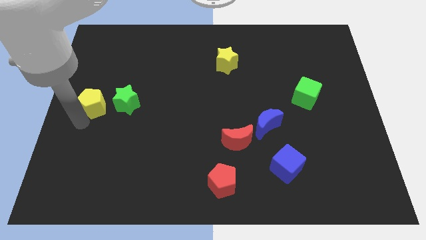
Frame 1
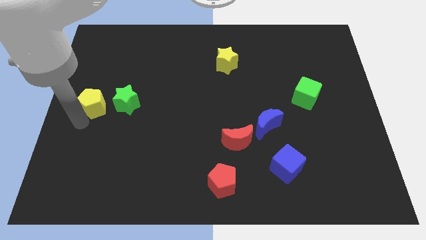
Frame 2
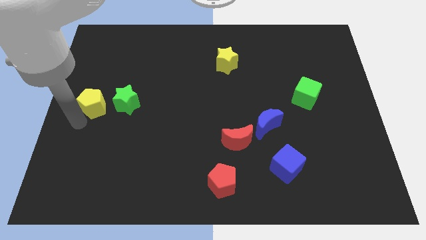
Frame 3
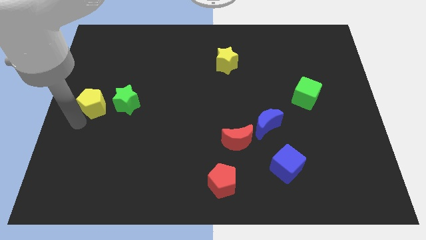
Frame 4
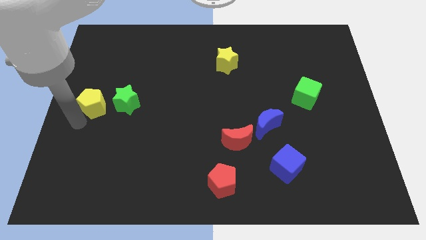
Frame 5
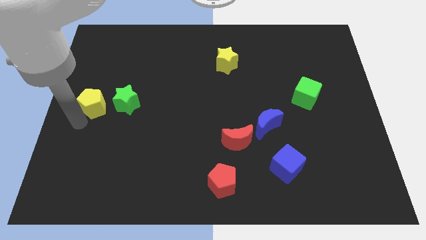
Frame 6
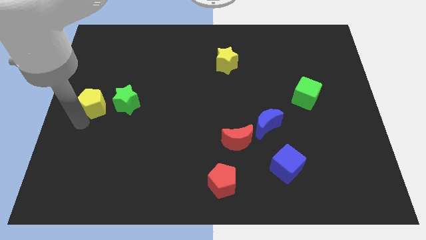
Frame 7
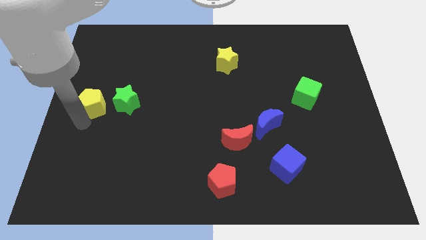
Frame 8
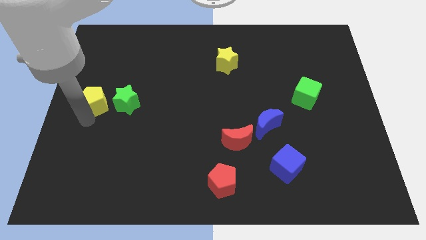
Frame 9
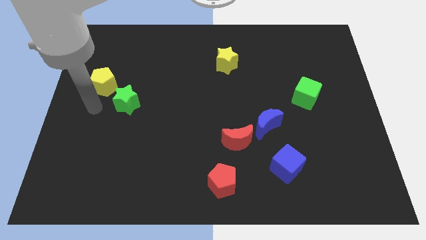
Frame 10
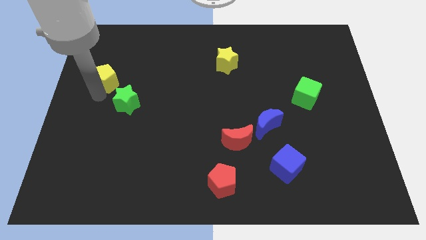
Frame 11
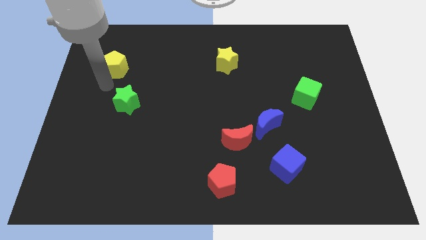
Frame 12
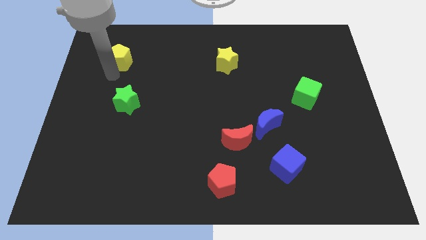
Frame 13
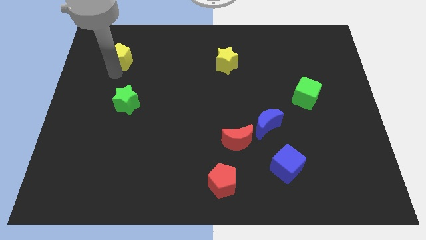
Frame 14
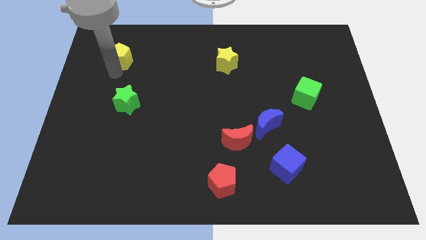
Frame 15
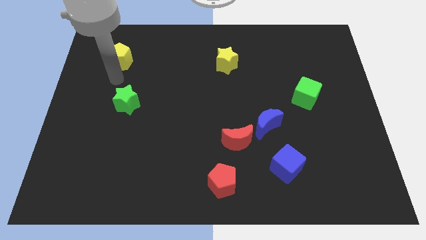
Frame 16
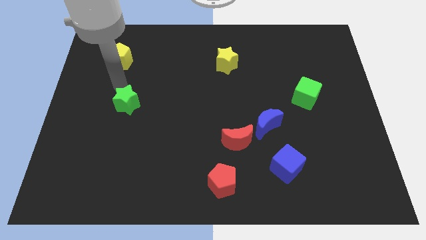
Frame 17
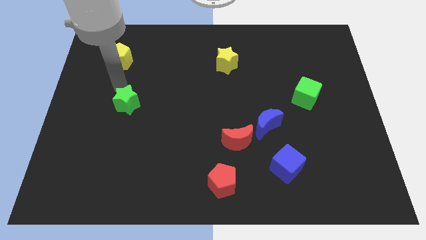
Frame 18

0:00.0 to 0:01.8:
slightly push the yellow pentagon upwards

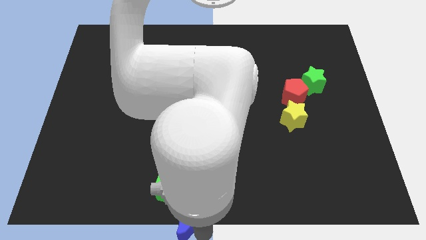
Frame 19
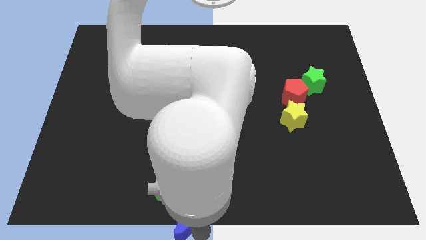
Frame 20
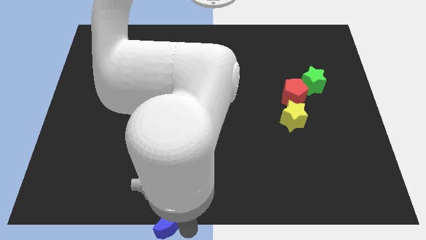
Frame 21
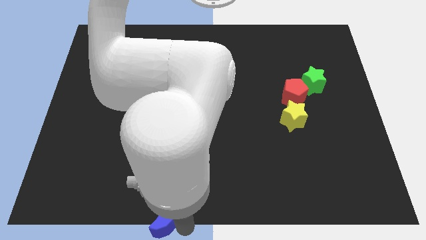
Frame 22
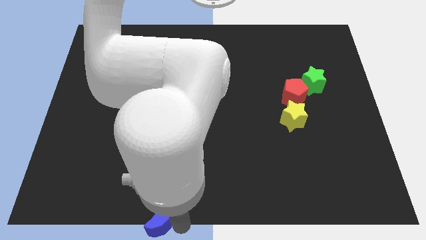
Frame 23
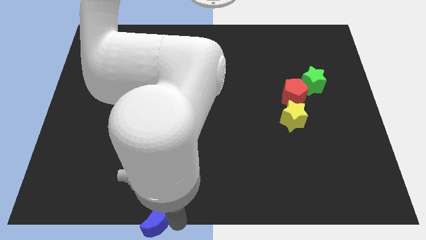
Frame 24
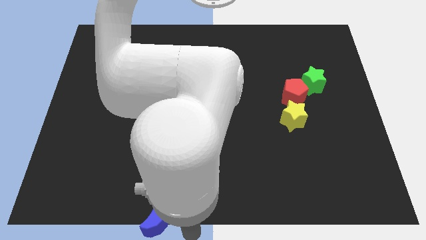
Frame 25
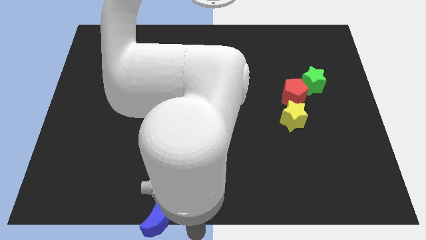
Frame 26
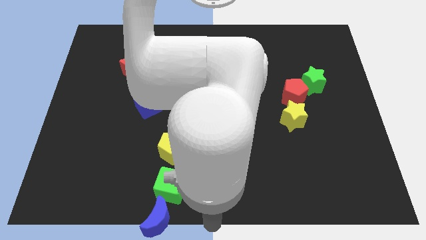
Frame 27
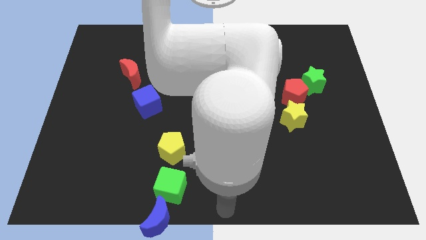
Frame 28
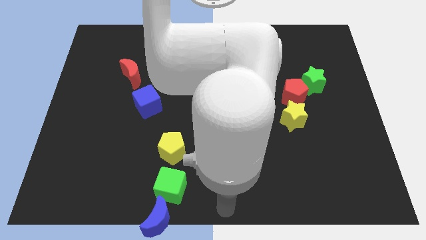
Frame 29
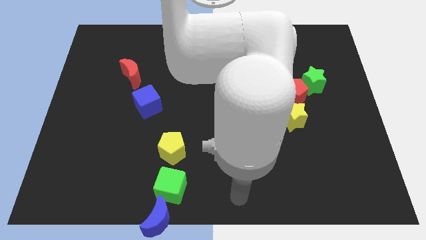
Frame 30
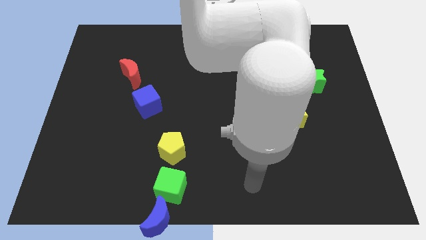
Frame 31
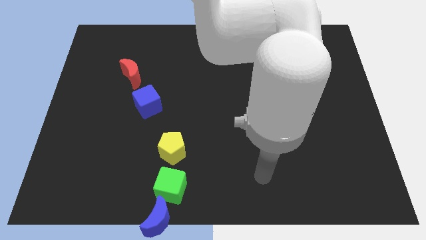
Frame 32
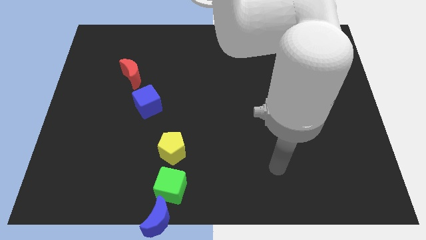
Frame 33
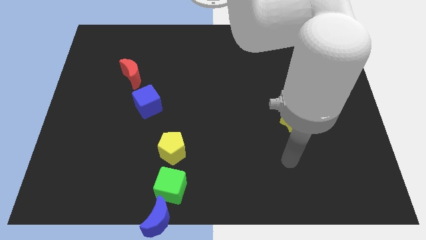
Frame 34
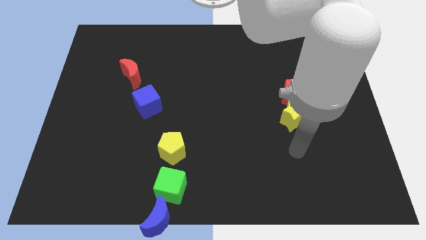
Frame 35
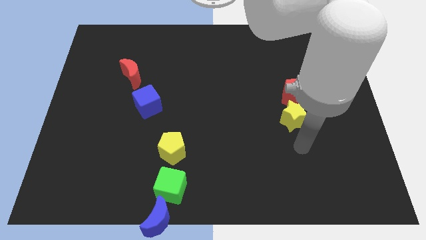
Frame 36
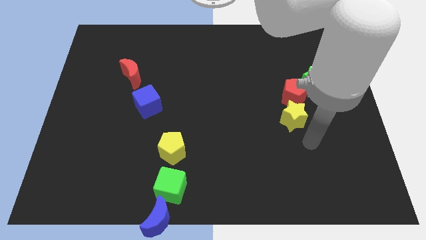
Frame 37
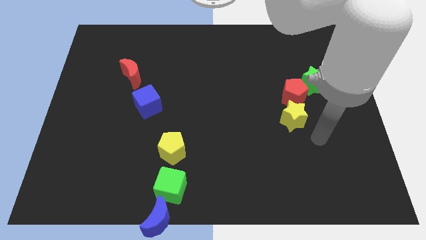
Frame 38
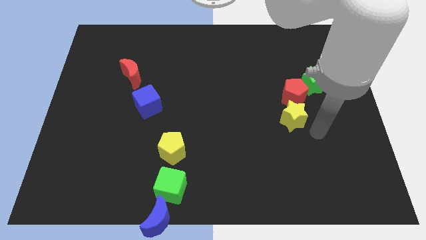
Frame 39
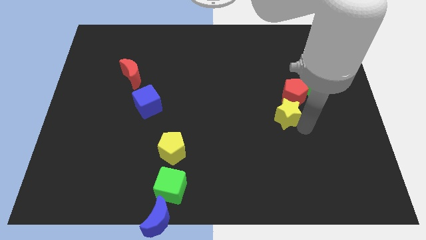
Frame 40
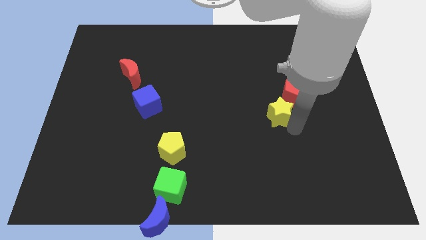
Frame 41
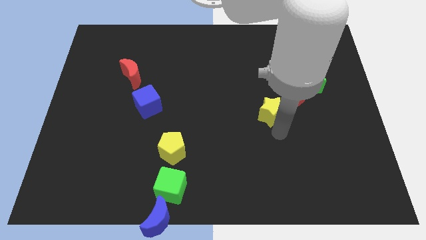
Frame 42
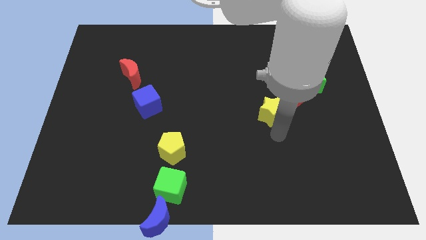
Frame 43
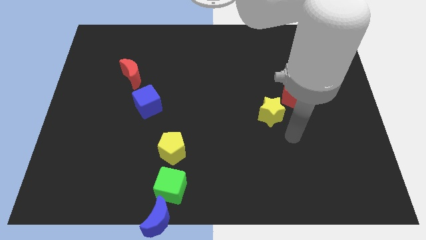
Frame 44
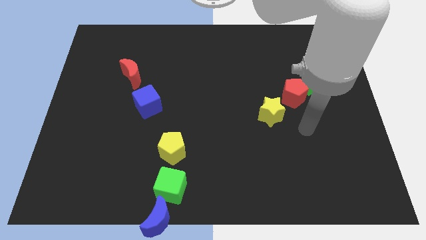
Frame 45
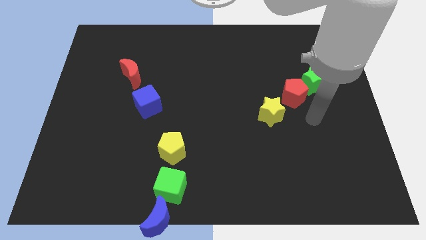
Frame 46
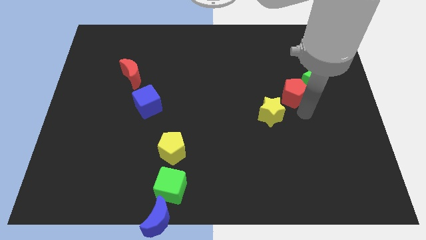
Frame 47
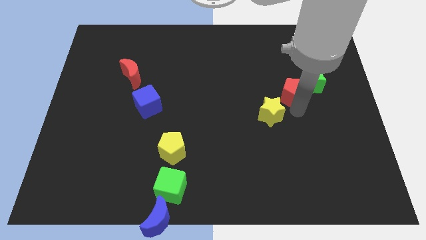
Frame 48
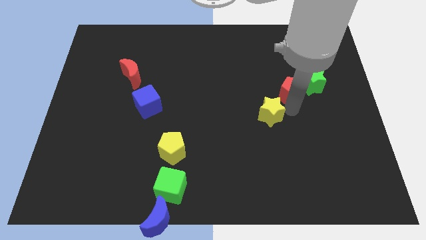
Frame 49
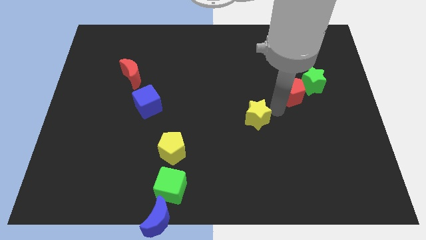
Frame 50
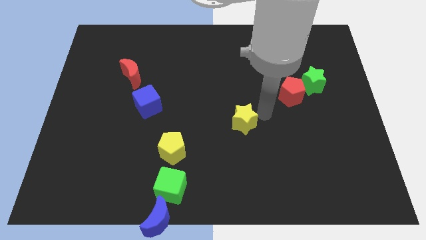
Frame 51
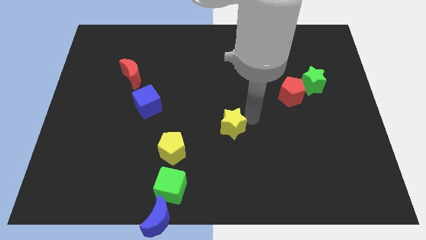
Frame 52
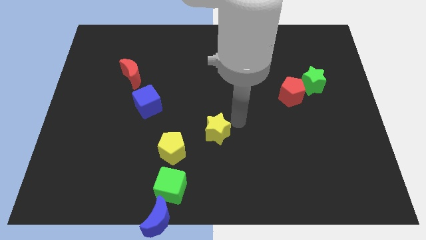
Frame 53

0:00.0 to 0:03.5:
place the yellow star diagonal to the blue cube

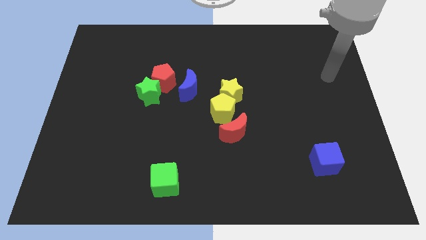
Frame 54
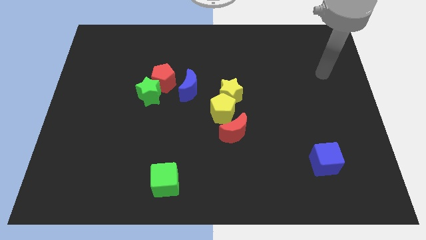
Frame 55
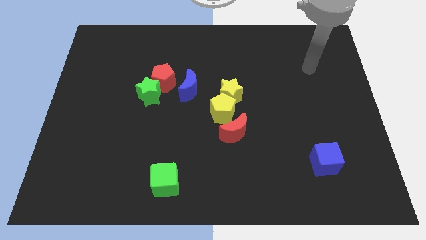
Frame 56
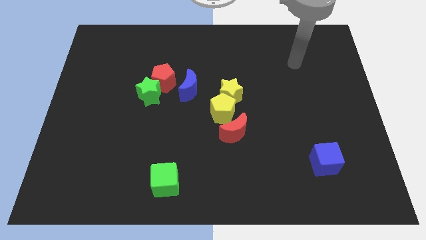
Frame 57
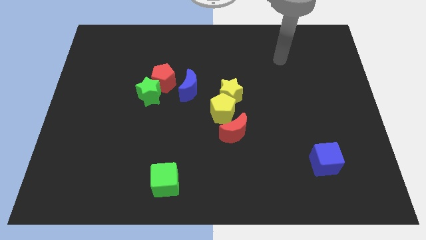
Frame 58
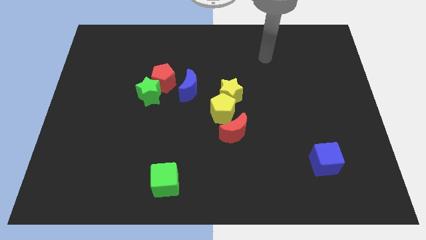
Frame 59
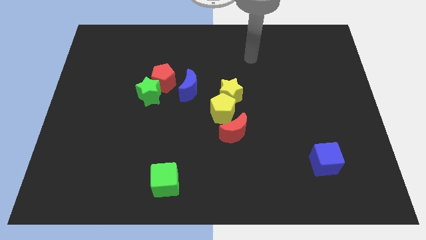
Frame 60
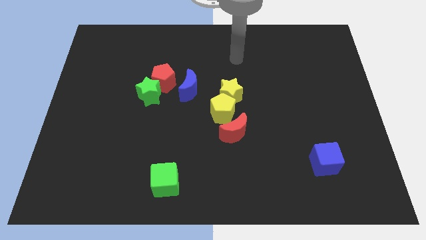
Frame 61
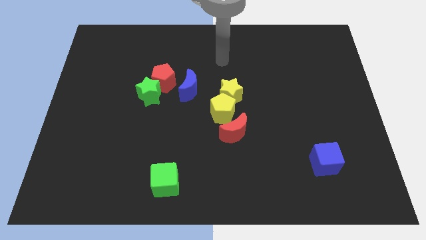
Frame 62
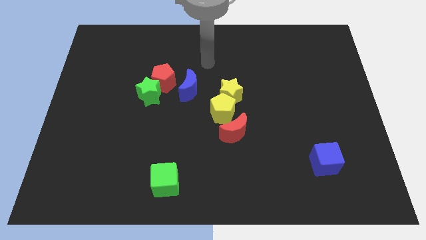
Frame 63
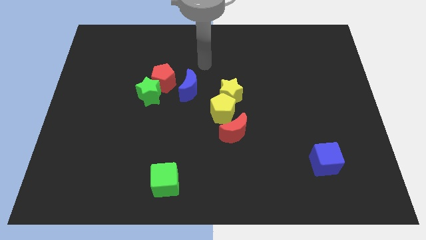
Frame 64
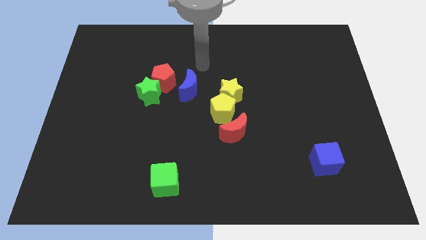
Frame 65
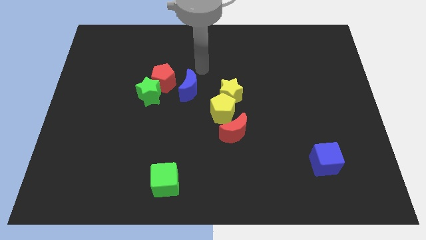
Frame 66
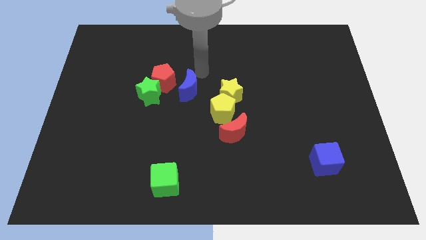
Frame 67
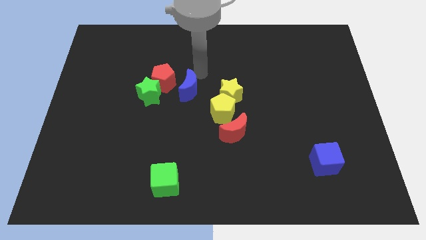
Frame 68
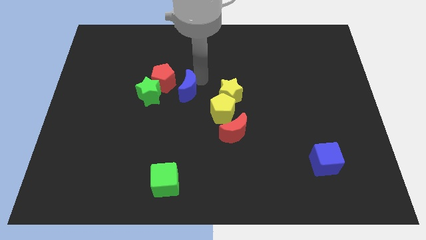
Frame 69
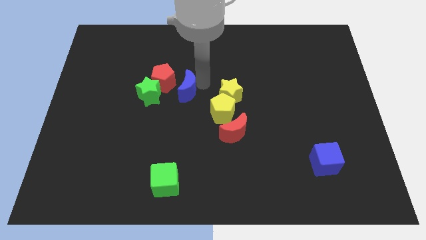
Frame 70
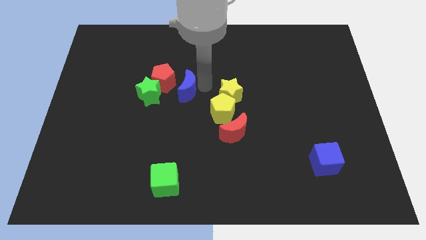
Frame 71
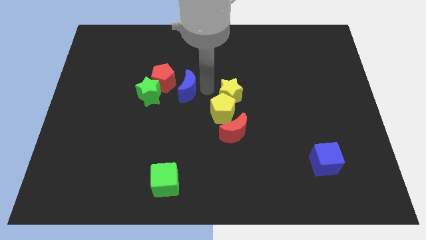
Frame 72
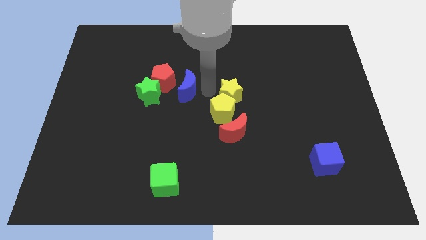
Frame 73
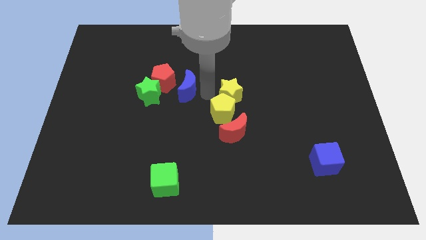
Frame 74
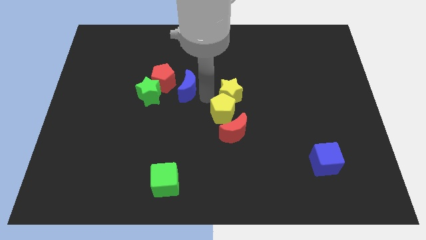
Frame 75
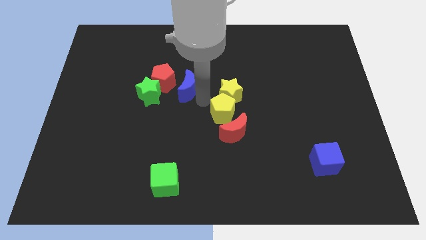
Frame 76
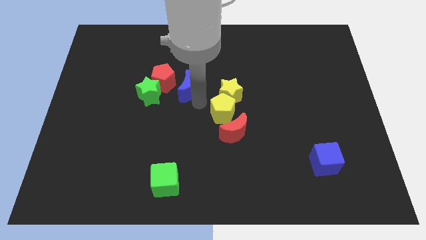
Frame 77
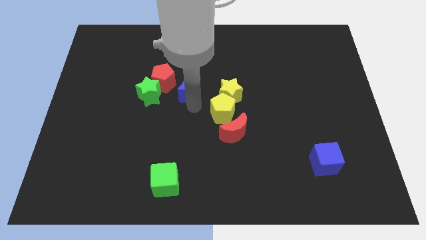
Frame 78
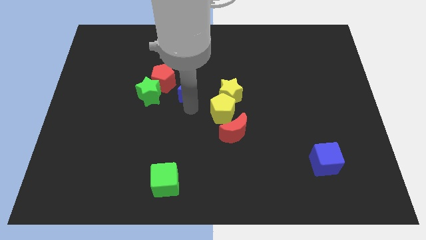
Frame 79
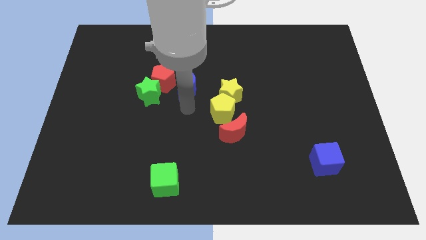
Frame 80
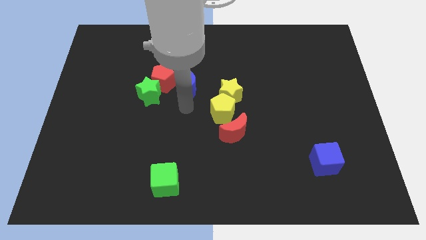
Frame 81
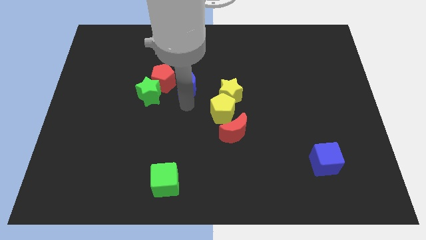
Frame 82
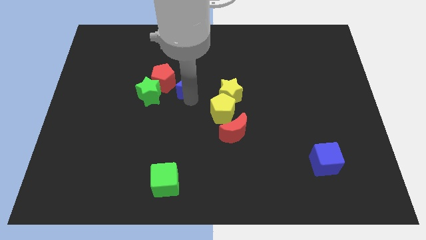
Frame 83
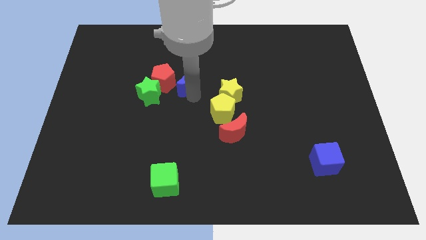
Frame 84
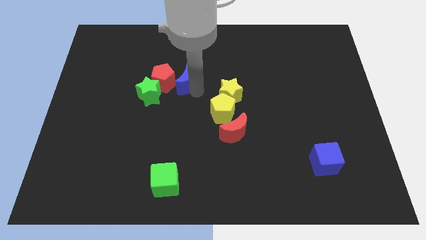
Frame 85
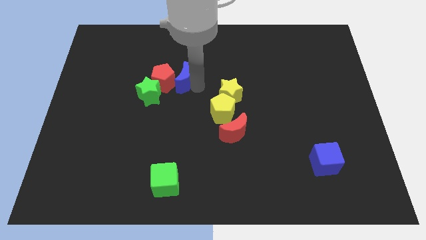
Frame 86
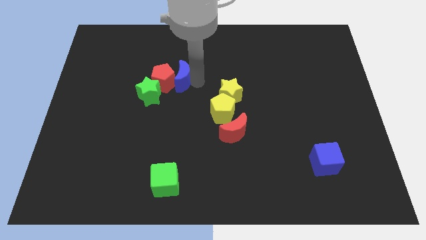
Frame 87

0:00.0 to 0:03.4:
push the blue moon close to the red pentagon

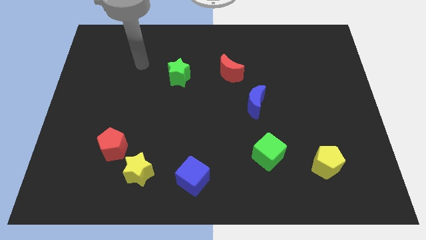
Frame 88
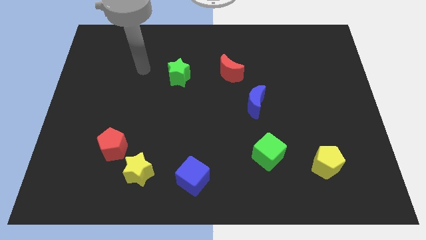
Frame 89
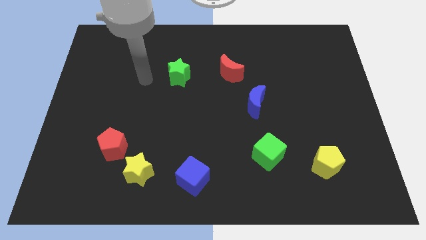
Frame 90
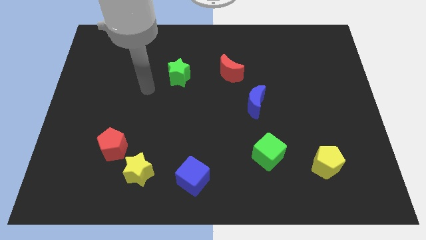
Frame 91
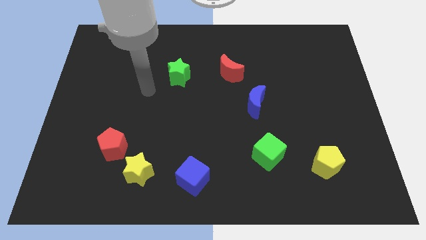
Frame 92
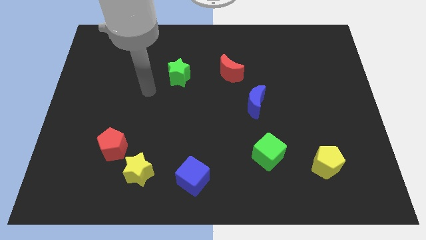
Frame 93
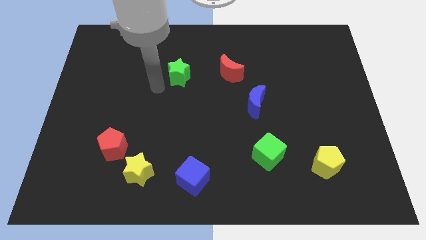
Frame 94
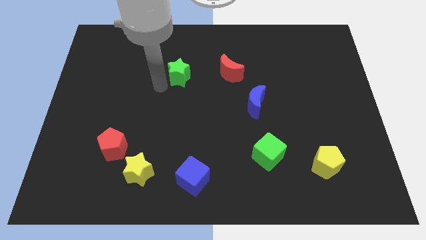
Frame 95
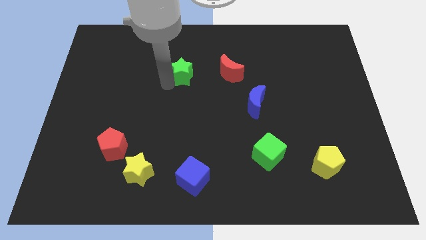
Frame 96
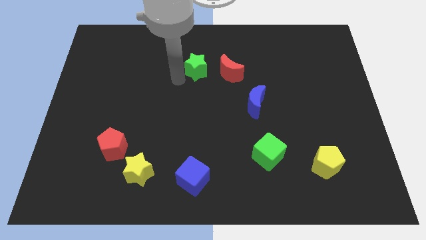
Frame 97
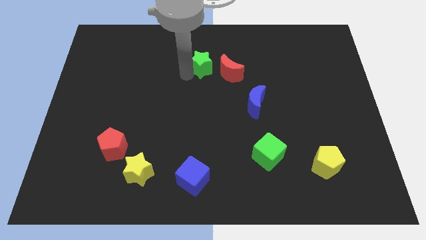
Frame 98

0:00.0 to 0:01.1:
move green star towards red moon
